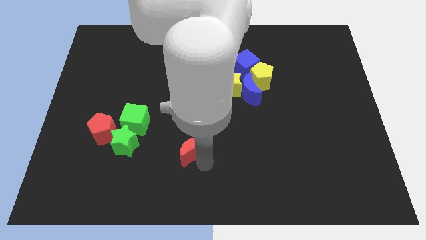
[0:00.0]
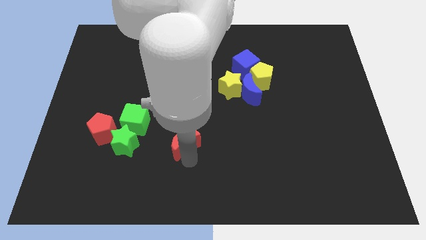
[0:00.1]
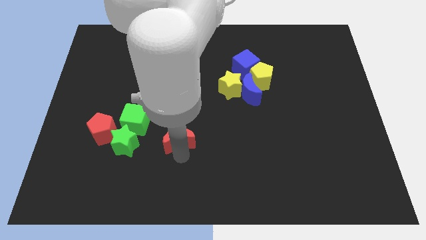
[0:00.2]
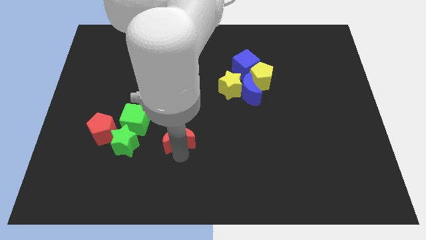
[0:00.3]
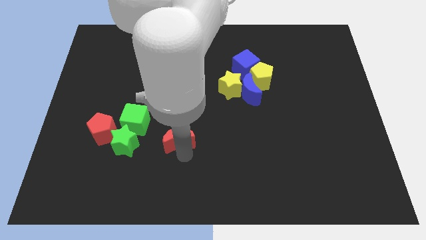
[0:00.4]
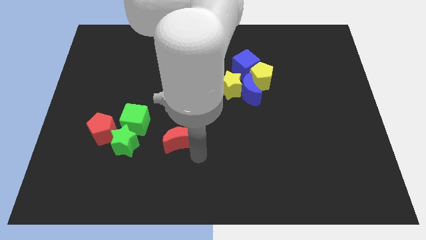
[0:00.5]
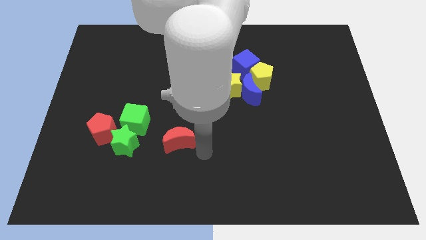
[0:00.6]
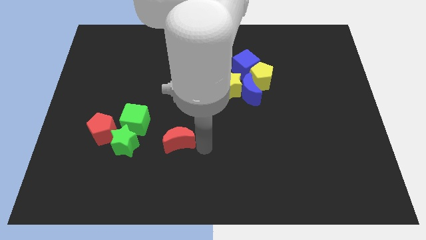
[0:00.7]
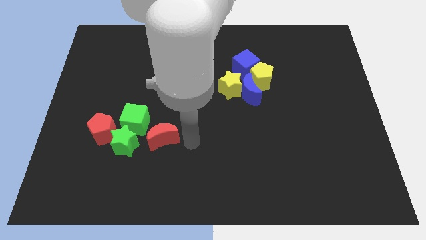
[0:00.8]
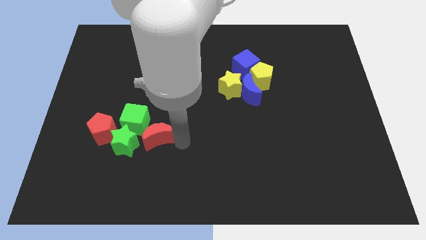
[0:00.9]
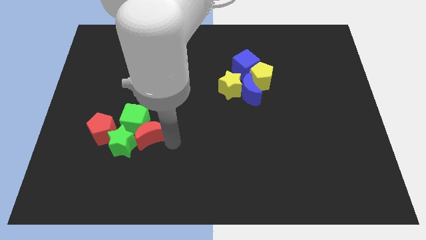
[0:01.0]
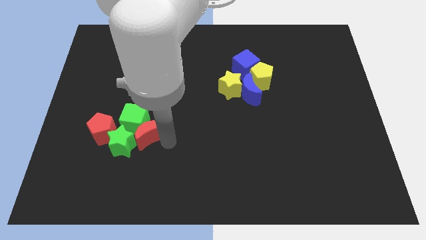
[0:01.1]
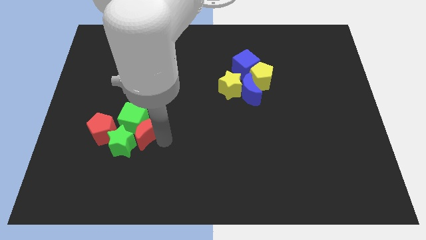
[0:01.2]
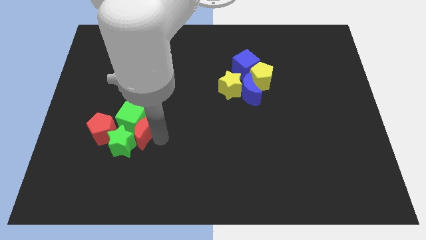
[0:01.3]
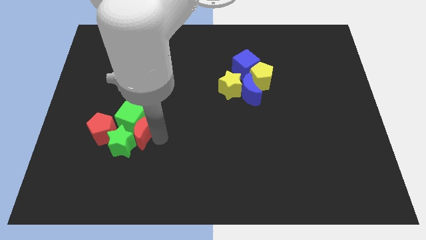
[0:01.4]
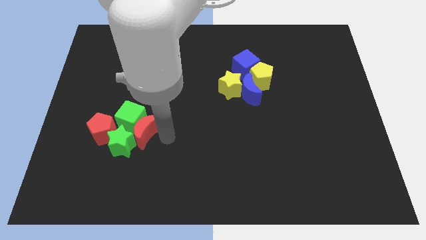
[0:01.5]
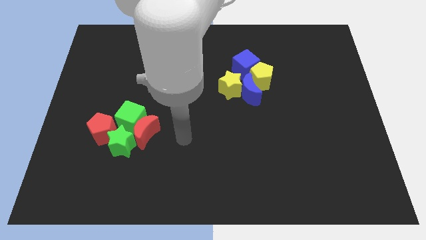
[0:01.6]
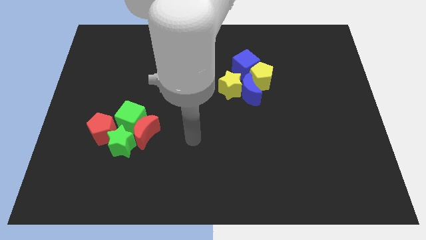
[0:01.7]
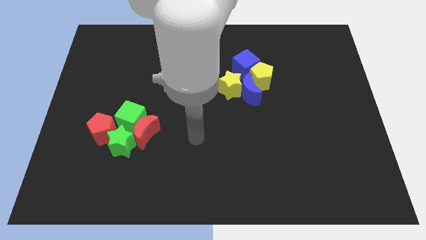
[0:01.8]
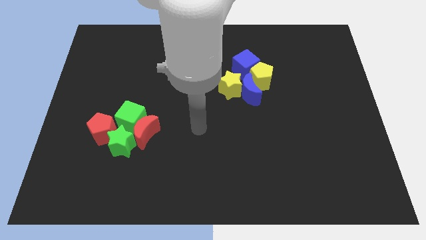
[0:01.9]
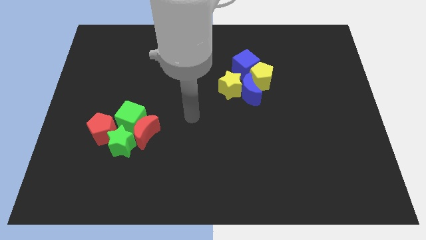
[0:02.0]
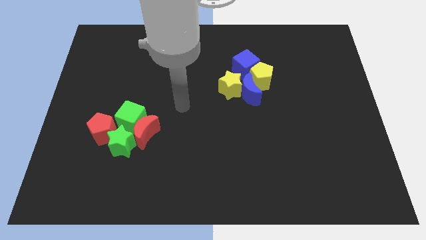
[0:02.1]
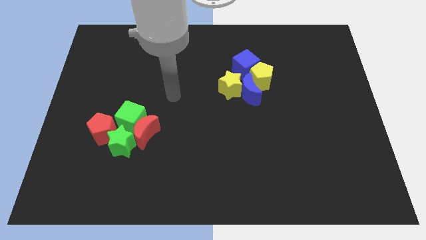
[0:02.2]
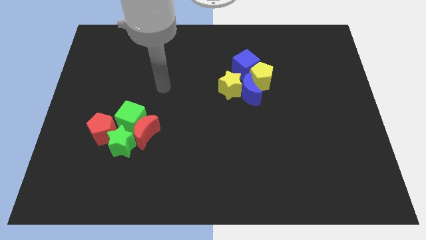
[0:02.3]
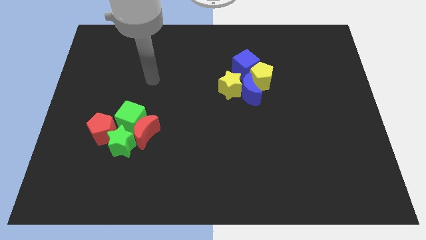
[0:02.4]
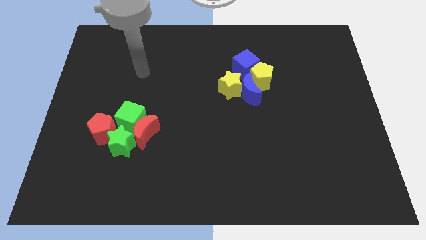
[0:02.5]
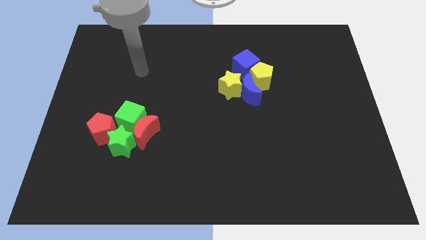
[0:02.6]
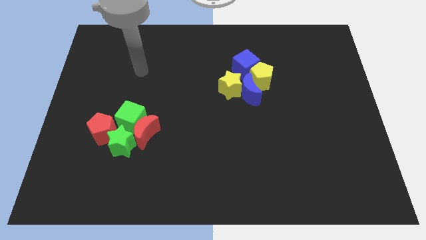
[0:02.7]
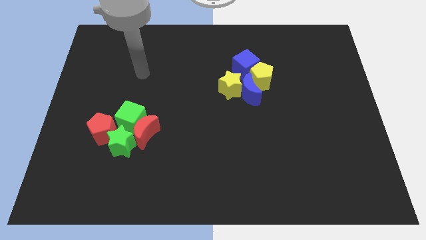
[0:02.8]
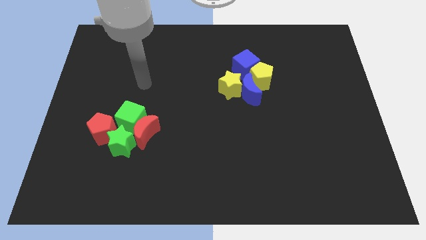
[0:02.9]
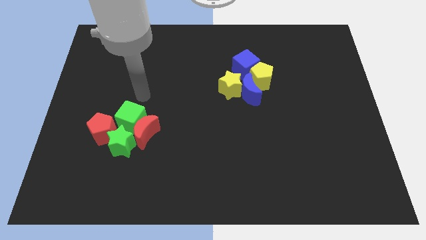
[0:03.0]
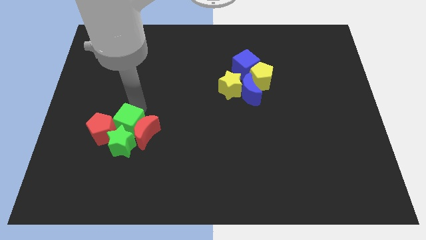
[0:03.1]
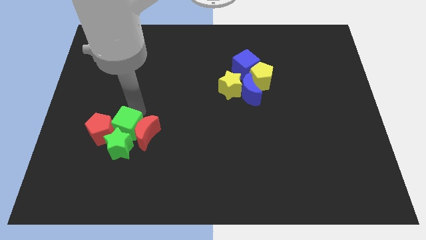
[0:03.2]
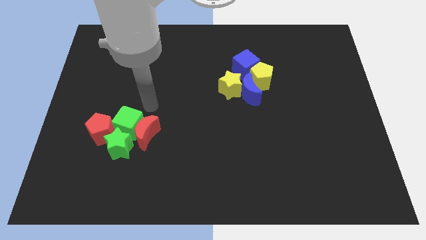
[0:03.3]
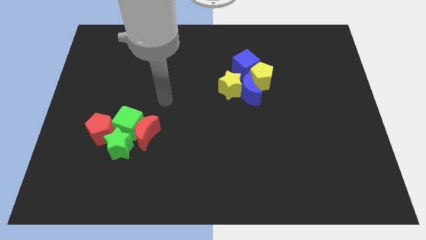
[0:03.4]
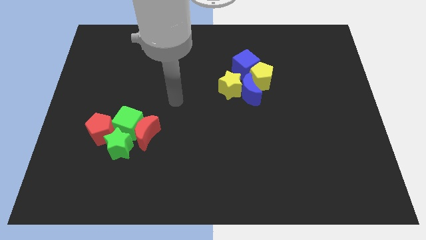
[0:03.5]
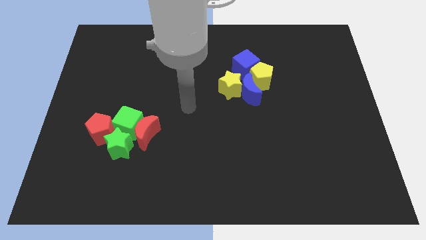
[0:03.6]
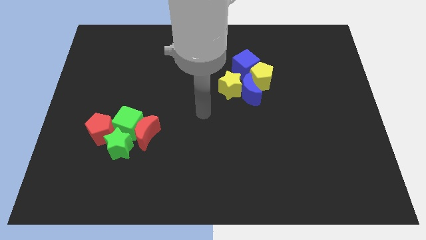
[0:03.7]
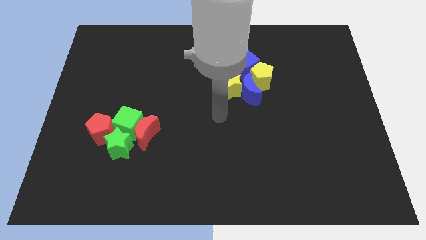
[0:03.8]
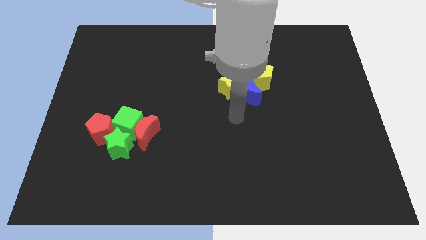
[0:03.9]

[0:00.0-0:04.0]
push the red moon to the right side of the green cube

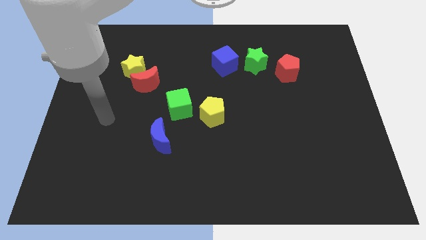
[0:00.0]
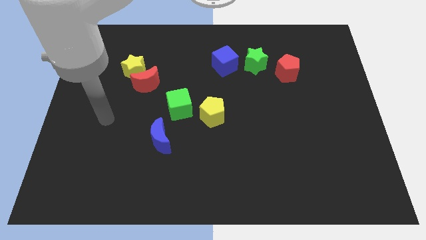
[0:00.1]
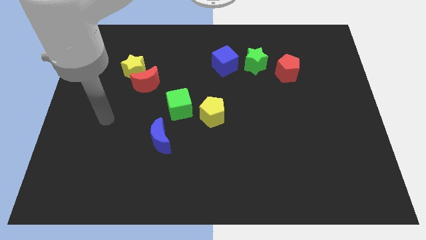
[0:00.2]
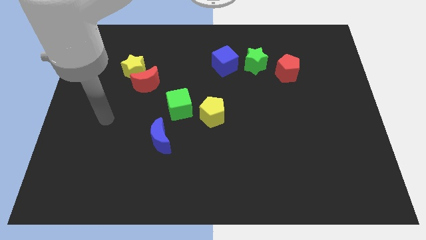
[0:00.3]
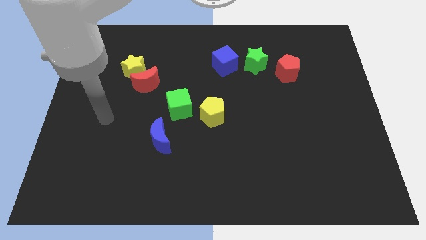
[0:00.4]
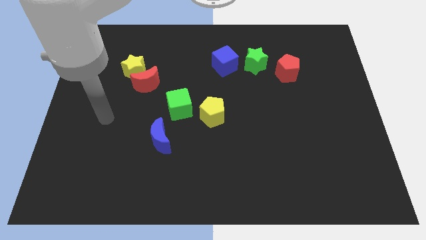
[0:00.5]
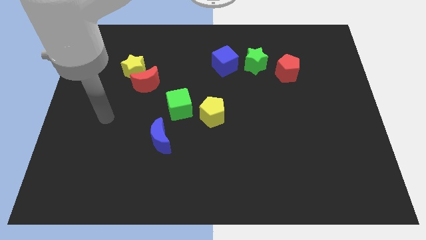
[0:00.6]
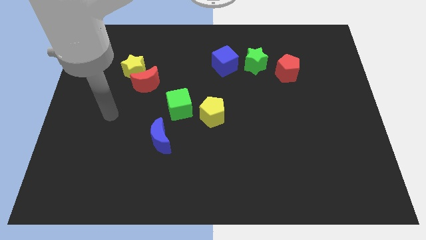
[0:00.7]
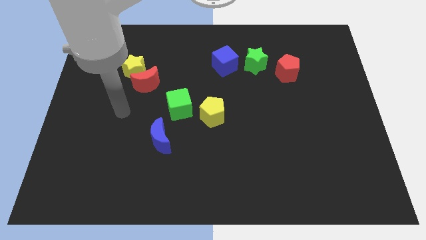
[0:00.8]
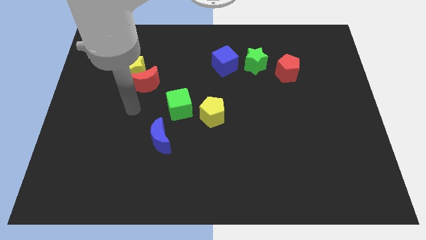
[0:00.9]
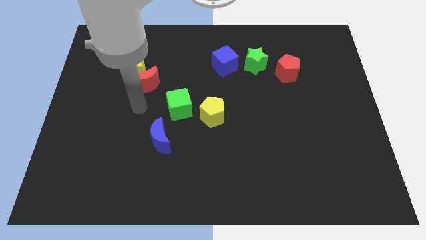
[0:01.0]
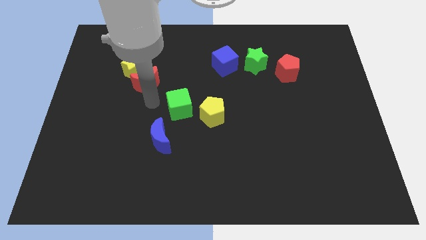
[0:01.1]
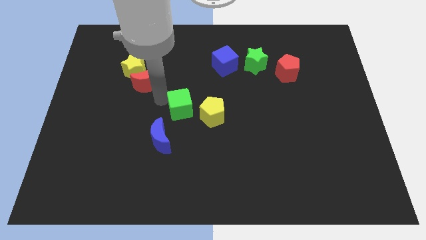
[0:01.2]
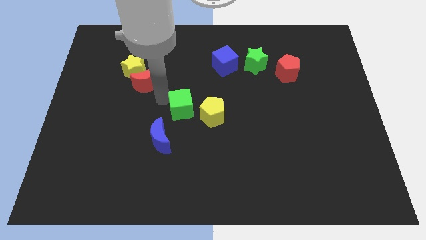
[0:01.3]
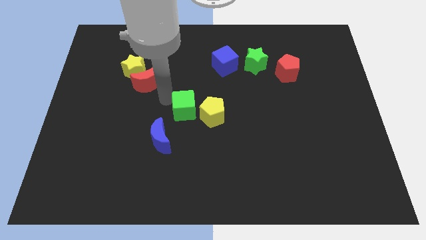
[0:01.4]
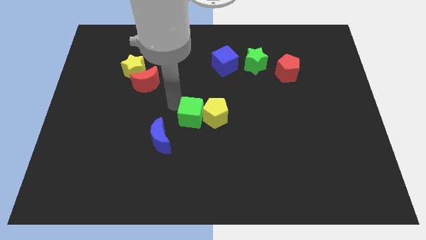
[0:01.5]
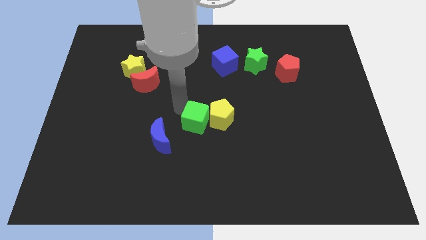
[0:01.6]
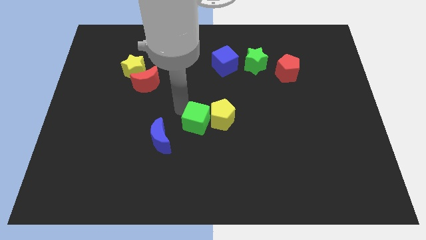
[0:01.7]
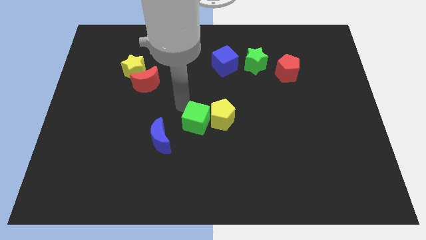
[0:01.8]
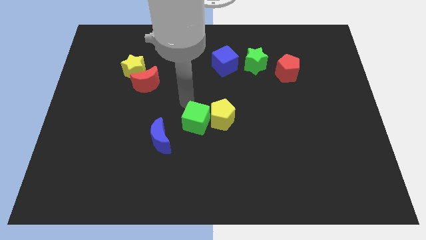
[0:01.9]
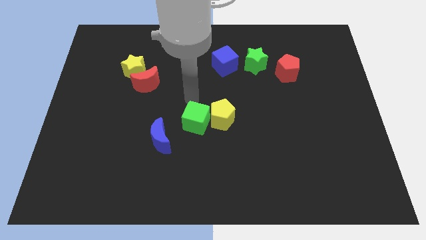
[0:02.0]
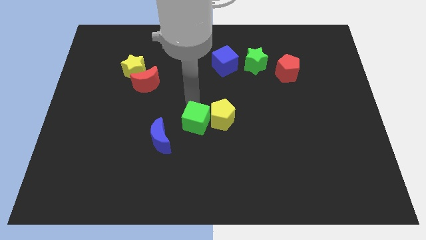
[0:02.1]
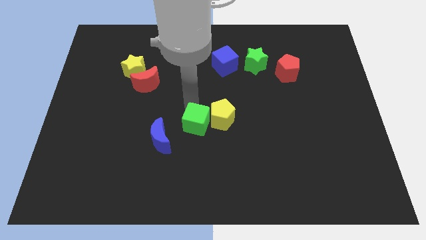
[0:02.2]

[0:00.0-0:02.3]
slightly push the green cube to the center of the board

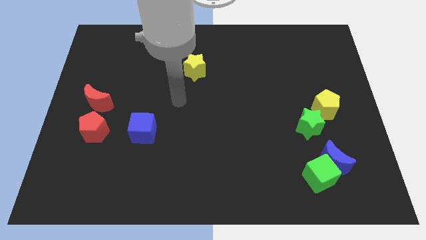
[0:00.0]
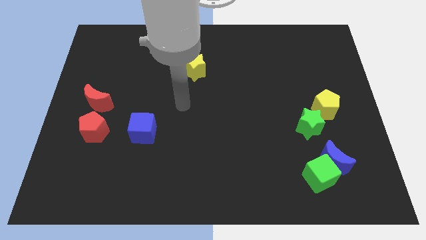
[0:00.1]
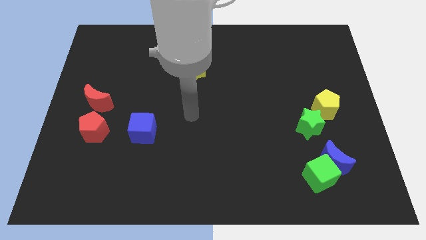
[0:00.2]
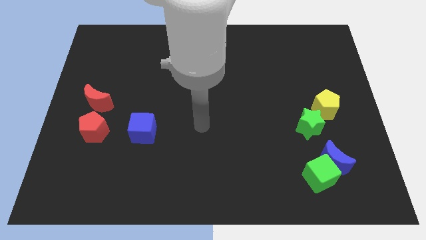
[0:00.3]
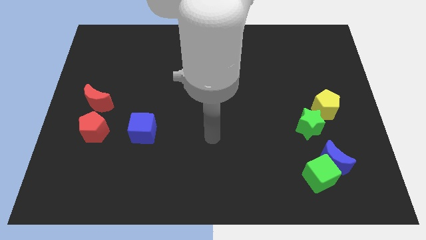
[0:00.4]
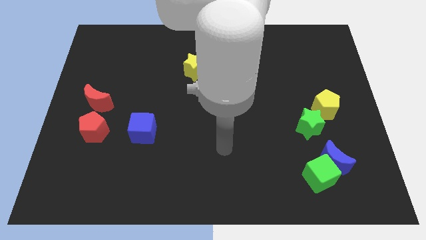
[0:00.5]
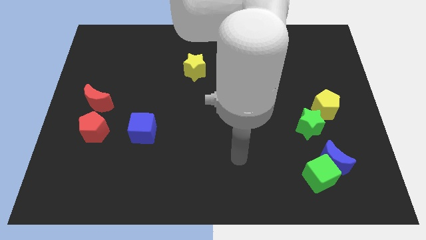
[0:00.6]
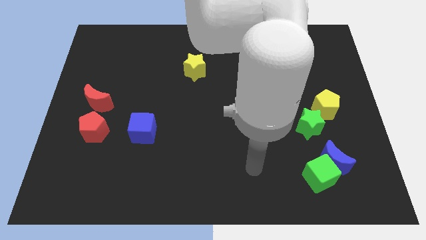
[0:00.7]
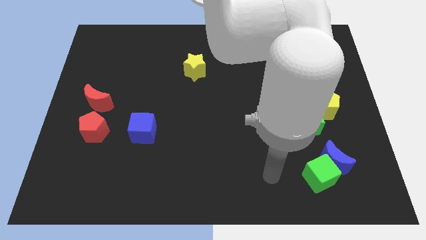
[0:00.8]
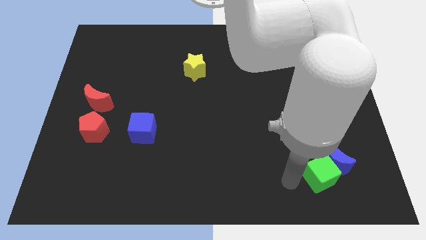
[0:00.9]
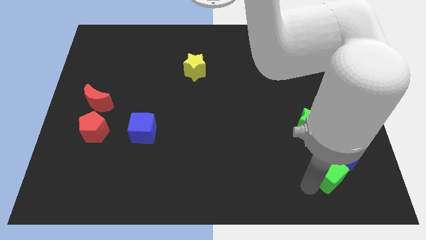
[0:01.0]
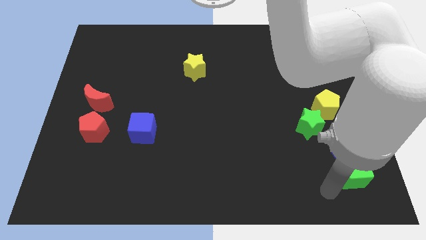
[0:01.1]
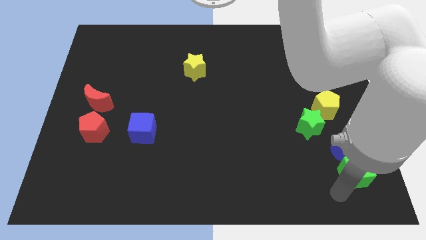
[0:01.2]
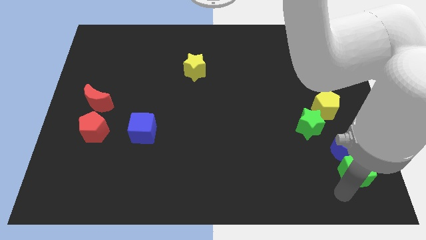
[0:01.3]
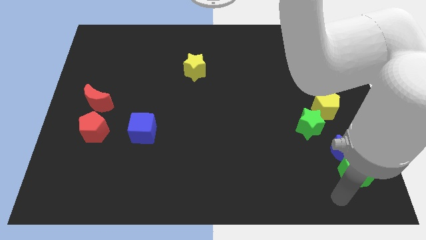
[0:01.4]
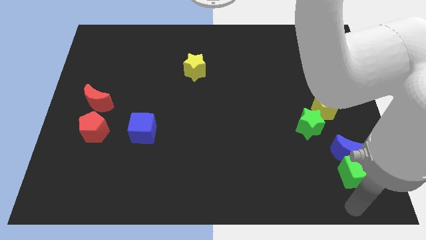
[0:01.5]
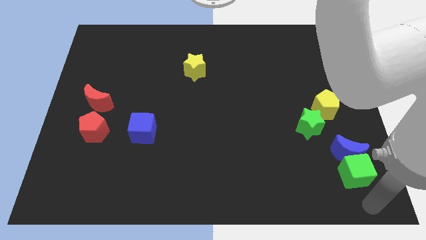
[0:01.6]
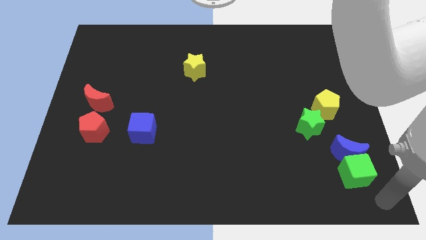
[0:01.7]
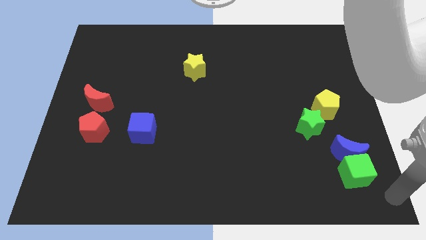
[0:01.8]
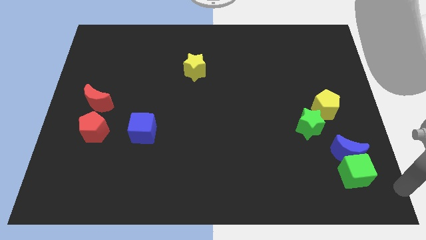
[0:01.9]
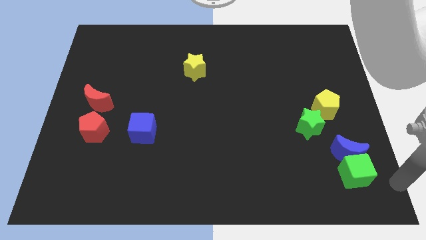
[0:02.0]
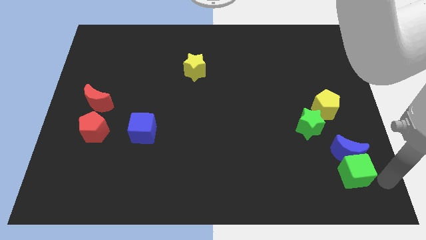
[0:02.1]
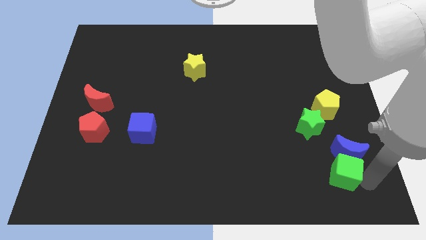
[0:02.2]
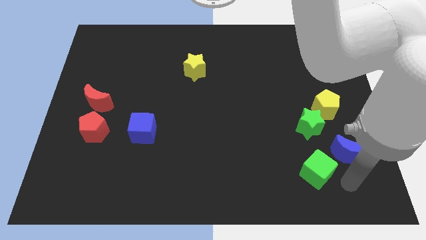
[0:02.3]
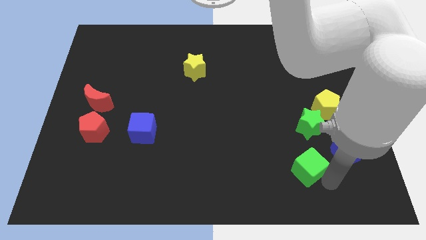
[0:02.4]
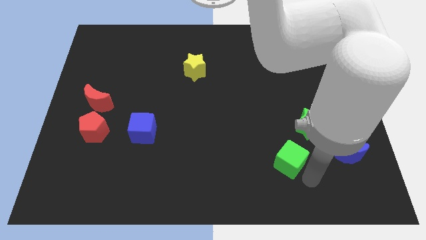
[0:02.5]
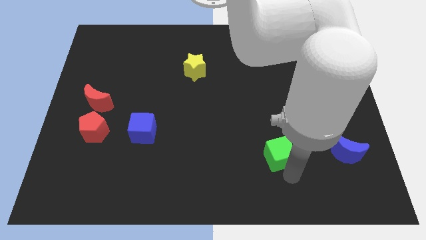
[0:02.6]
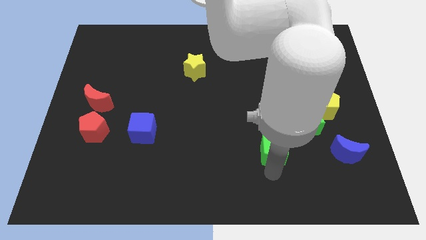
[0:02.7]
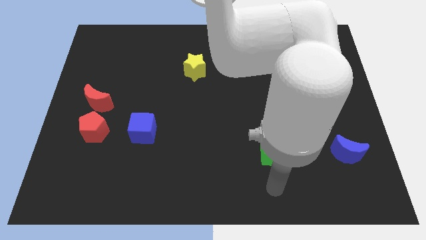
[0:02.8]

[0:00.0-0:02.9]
move green cube left beside the blue moon
